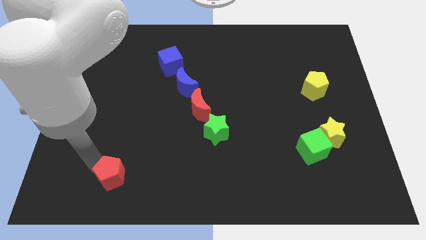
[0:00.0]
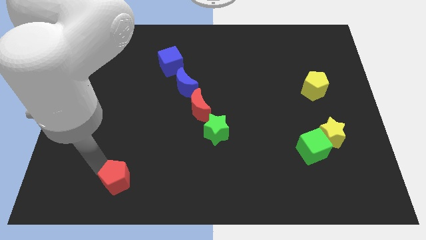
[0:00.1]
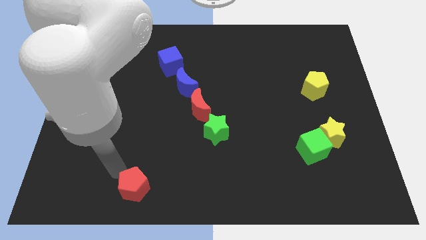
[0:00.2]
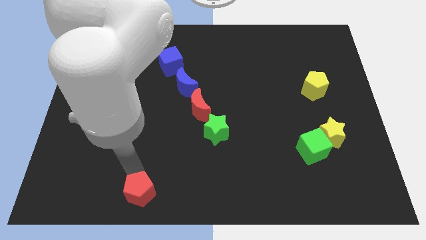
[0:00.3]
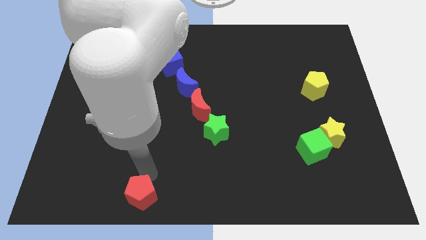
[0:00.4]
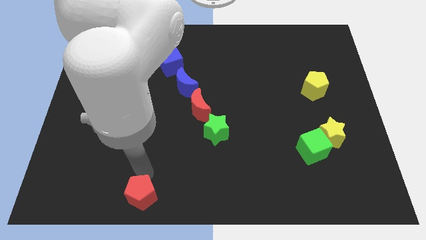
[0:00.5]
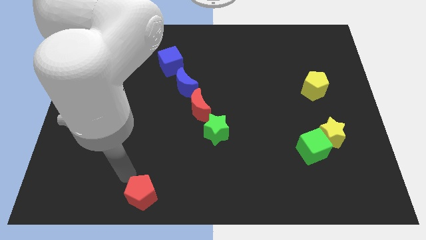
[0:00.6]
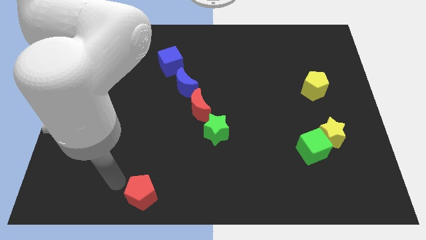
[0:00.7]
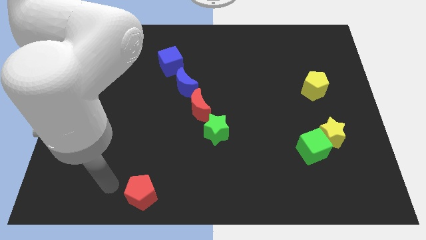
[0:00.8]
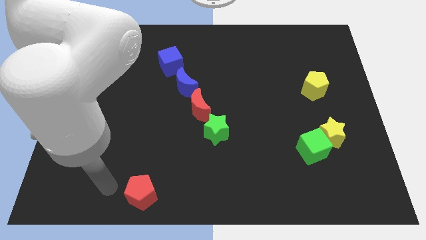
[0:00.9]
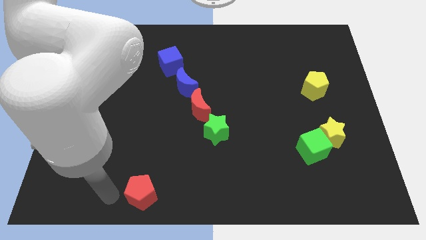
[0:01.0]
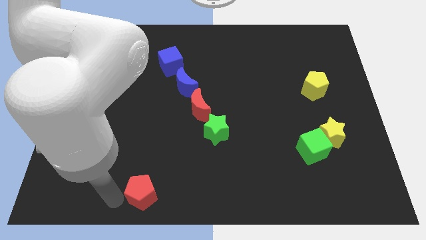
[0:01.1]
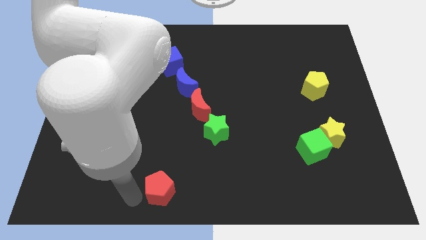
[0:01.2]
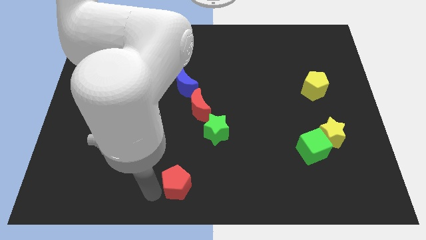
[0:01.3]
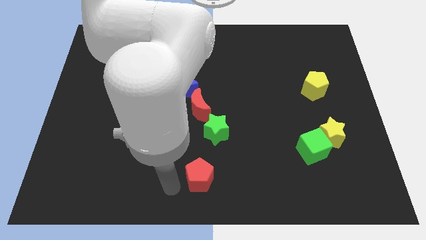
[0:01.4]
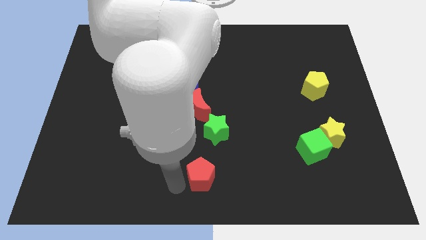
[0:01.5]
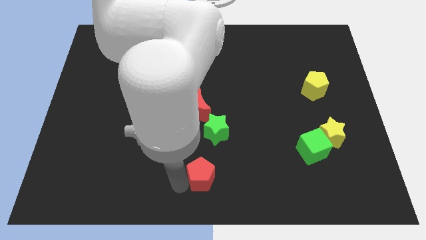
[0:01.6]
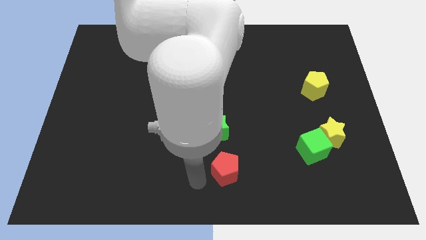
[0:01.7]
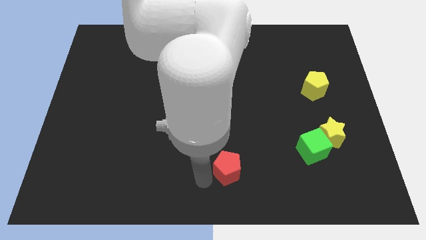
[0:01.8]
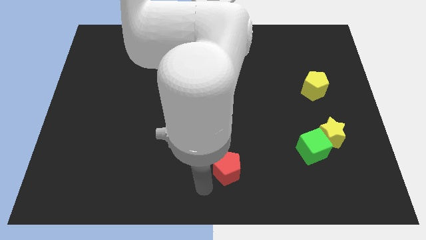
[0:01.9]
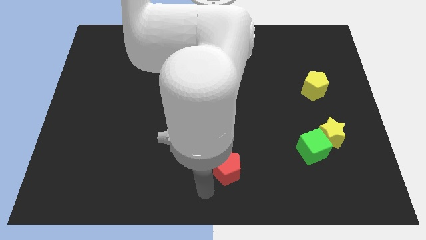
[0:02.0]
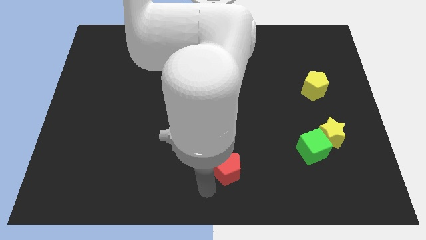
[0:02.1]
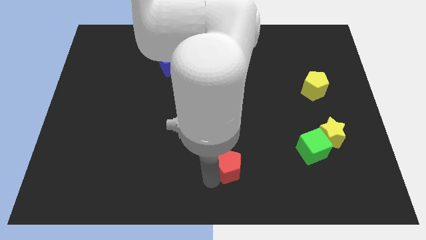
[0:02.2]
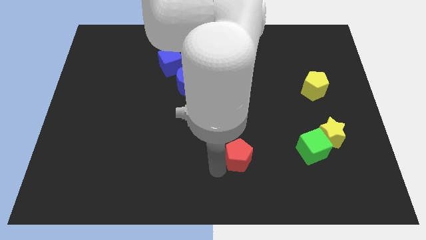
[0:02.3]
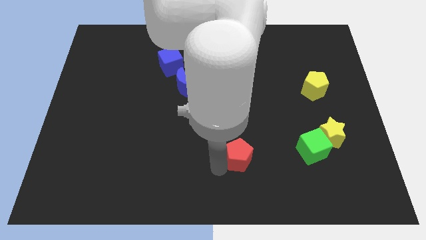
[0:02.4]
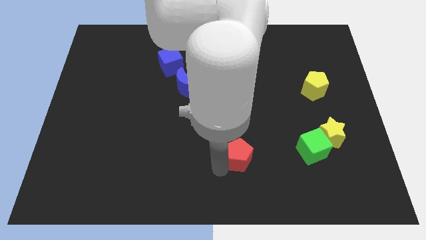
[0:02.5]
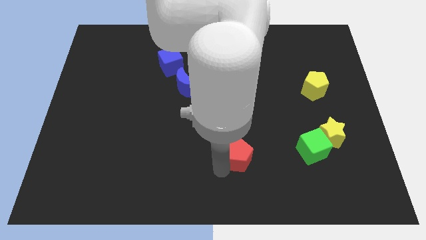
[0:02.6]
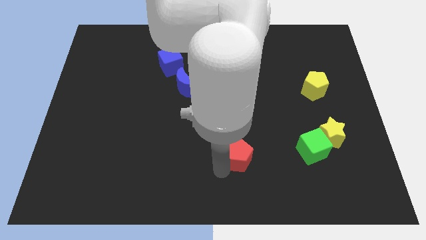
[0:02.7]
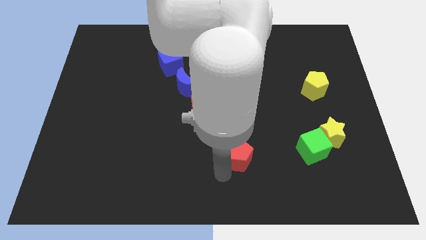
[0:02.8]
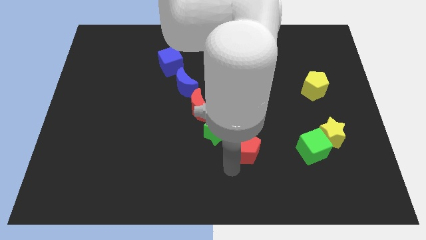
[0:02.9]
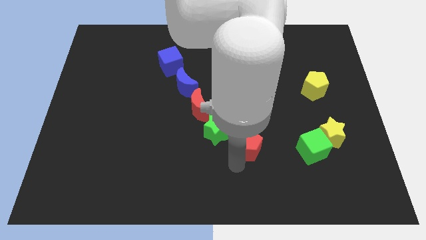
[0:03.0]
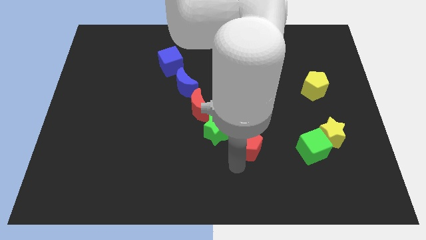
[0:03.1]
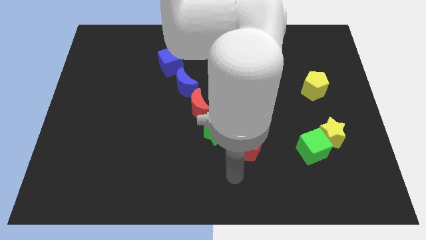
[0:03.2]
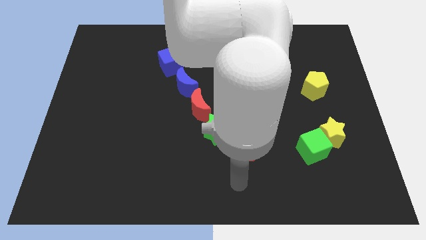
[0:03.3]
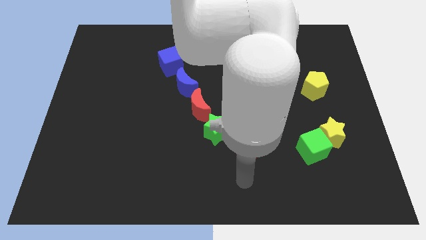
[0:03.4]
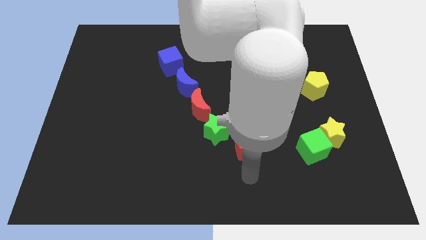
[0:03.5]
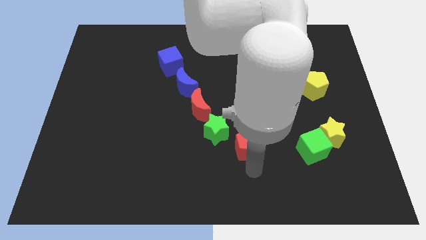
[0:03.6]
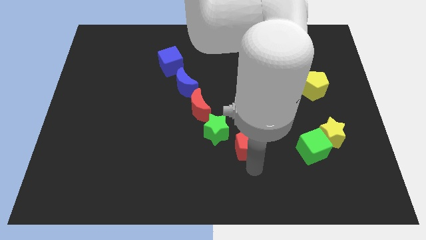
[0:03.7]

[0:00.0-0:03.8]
place the red pentagon at the bottom right side of the green star

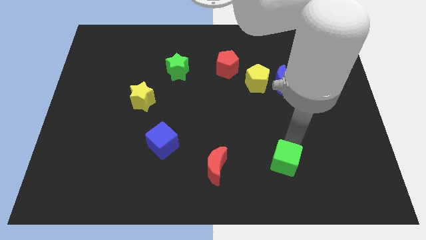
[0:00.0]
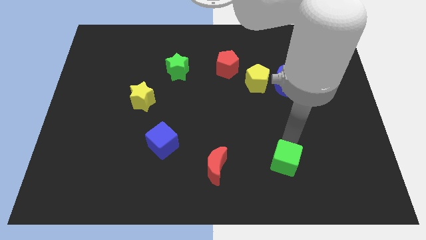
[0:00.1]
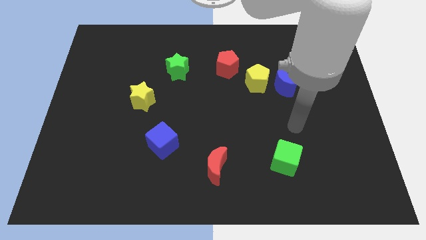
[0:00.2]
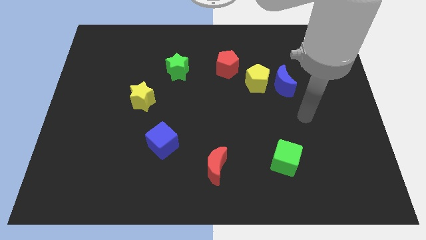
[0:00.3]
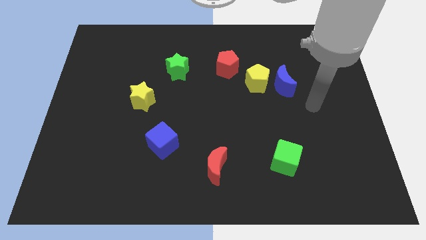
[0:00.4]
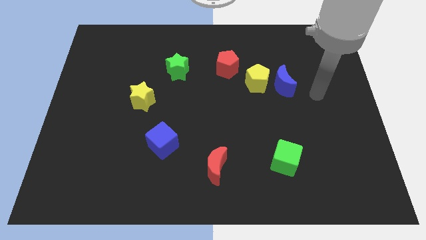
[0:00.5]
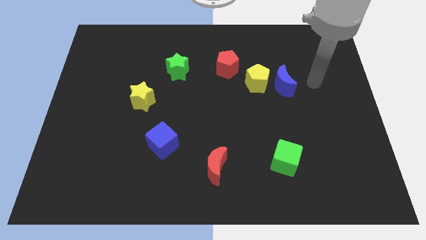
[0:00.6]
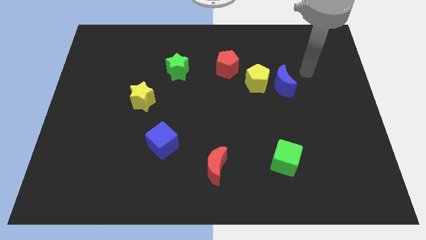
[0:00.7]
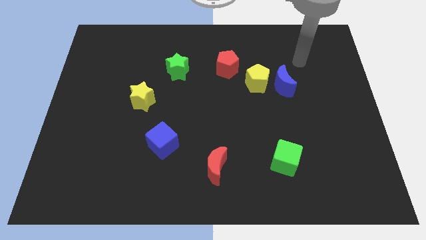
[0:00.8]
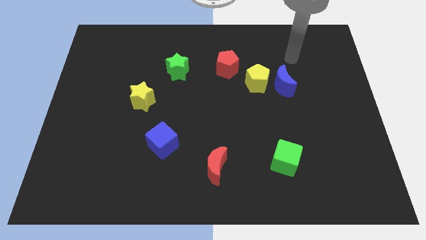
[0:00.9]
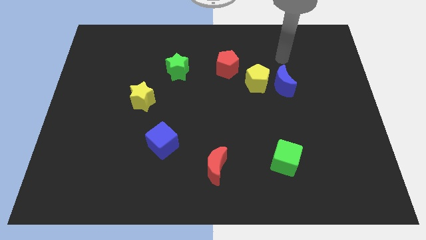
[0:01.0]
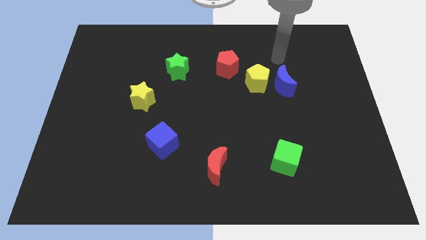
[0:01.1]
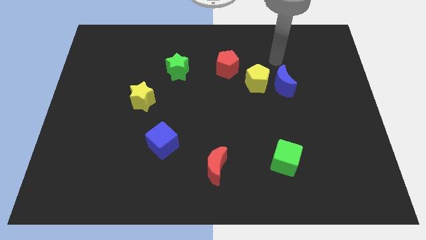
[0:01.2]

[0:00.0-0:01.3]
move yourself away from the green cube

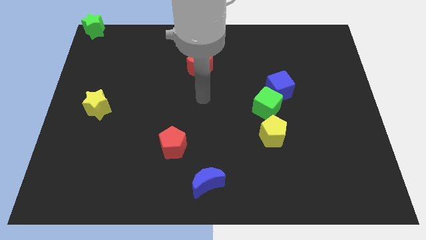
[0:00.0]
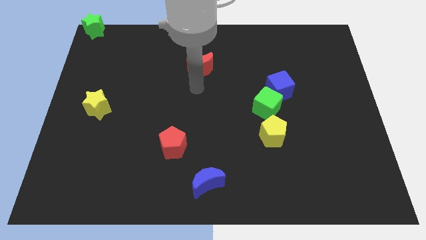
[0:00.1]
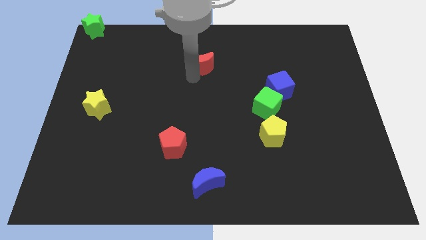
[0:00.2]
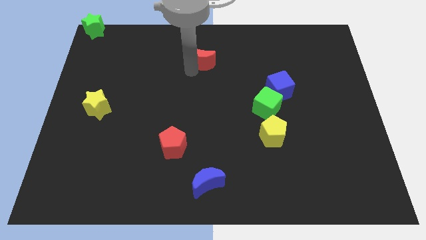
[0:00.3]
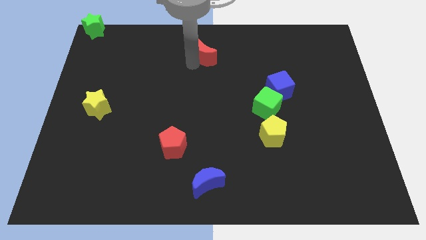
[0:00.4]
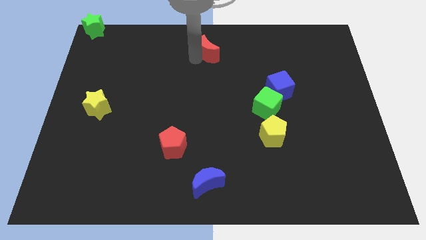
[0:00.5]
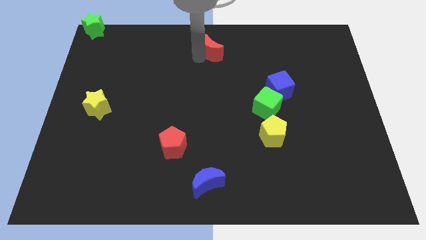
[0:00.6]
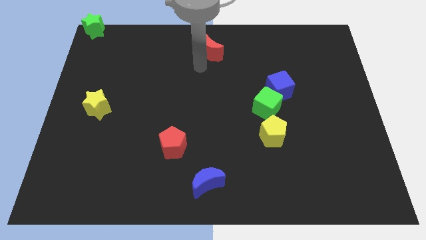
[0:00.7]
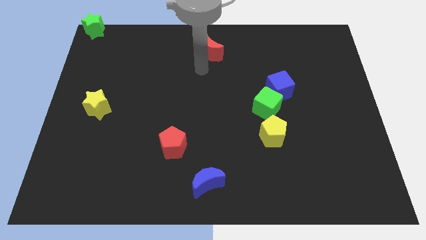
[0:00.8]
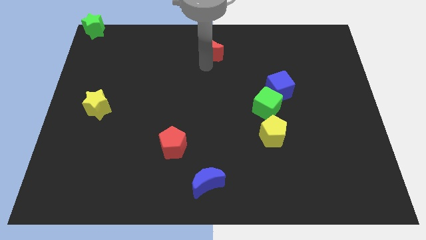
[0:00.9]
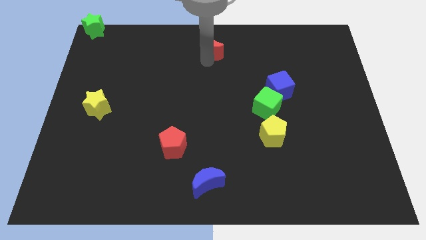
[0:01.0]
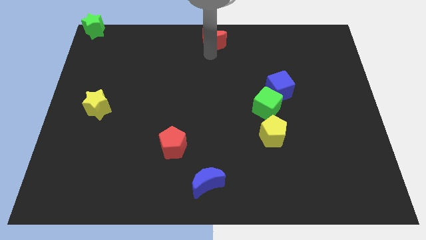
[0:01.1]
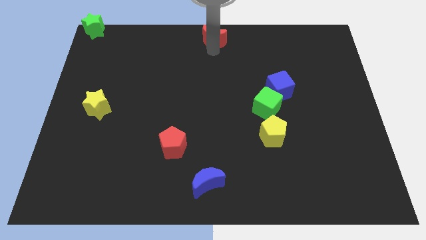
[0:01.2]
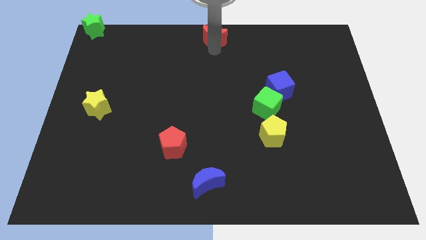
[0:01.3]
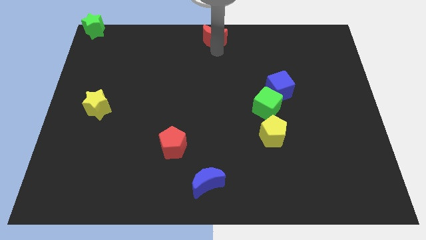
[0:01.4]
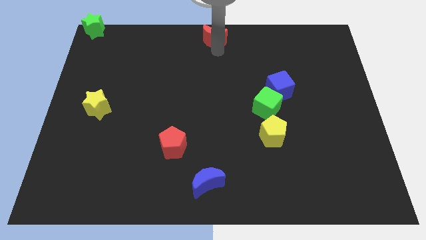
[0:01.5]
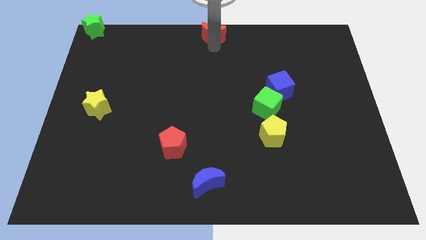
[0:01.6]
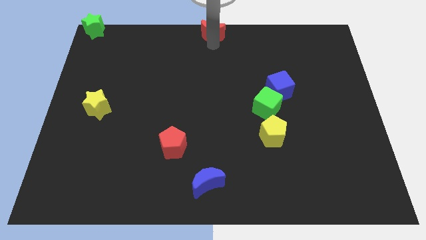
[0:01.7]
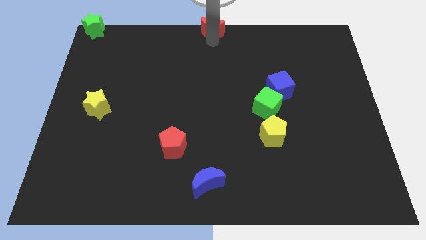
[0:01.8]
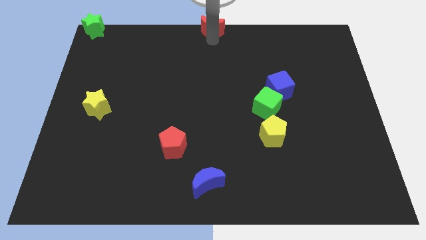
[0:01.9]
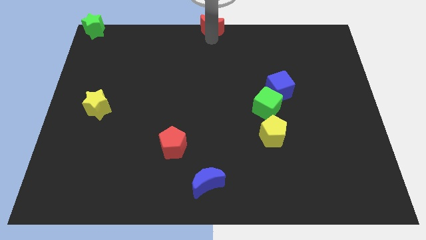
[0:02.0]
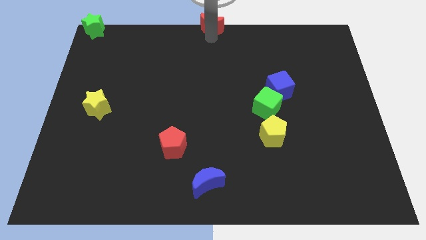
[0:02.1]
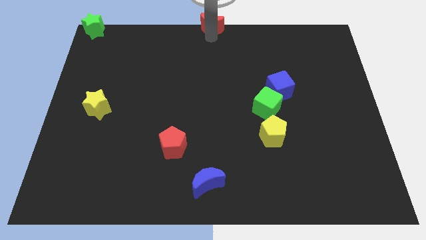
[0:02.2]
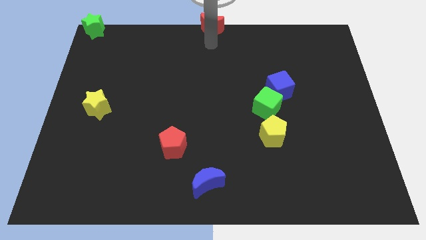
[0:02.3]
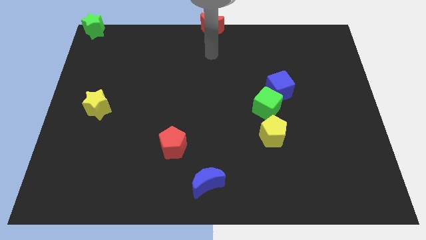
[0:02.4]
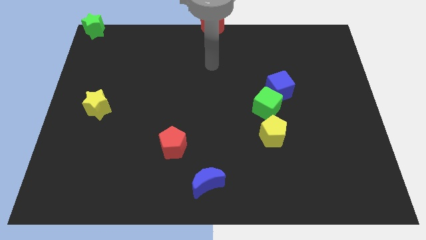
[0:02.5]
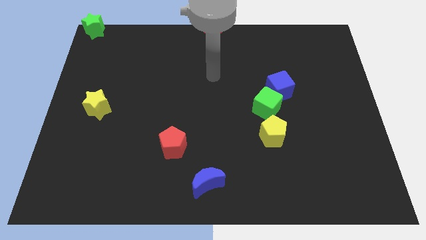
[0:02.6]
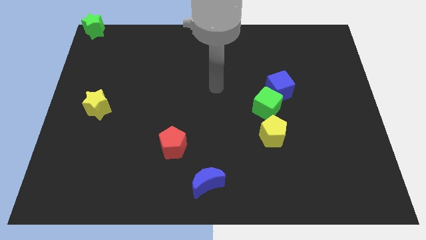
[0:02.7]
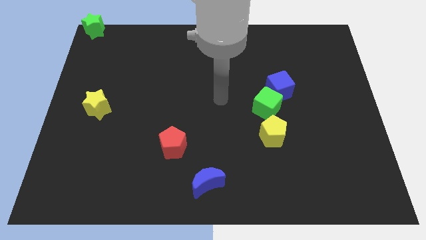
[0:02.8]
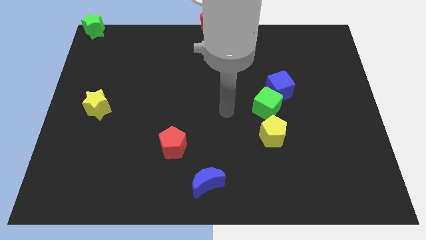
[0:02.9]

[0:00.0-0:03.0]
place the red moon on the top center

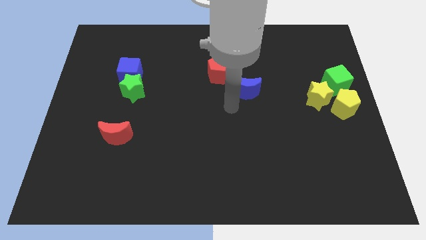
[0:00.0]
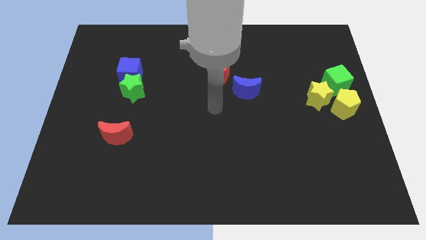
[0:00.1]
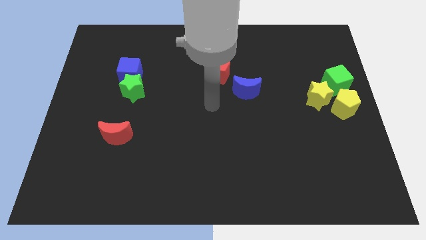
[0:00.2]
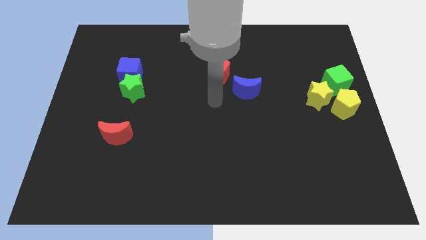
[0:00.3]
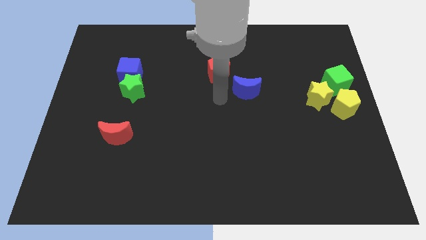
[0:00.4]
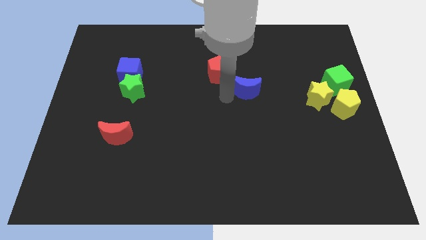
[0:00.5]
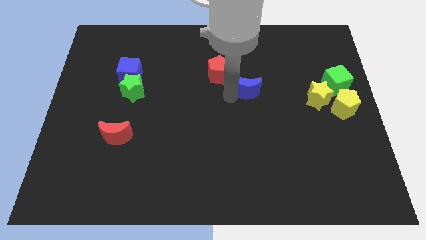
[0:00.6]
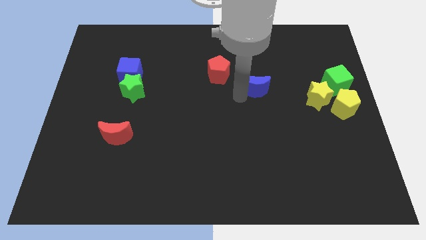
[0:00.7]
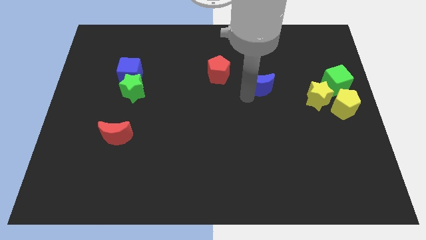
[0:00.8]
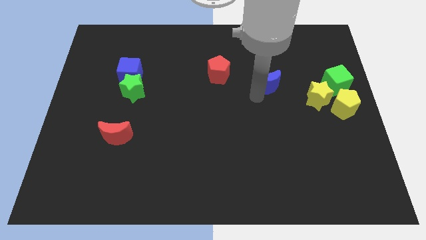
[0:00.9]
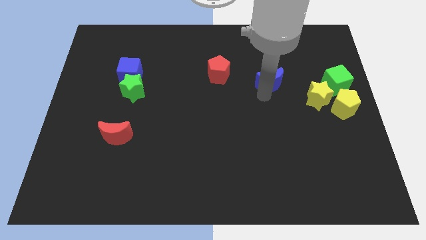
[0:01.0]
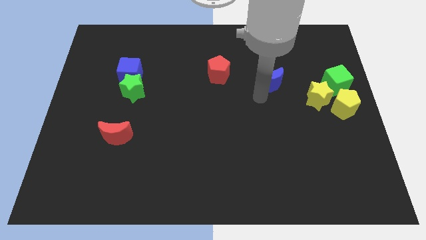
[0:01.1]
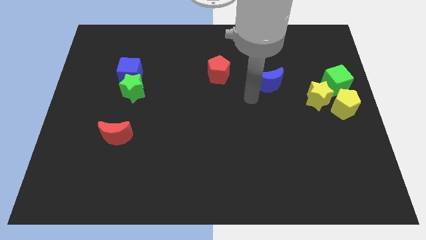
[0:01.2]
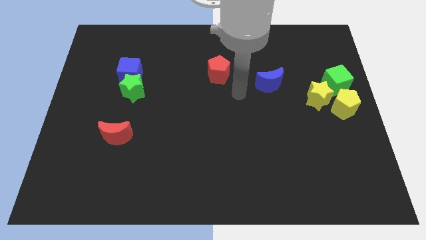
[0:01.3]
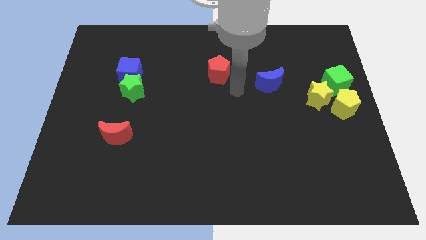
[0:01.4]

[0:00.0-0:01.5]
move the blue moon to the right of the red pentagon
